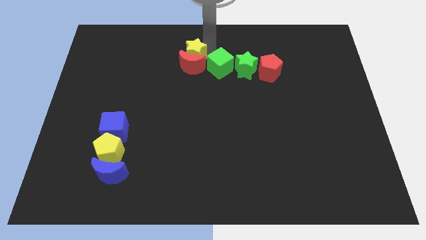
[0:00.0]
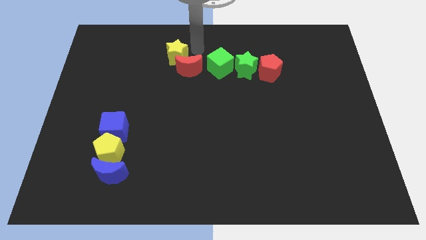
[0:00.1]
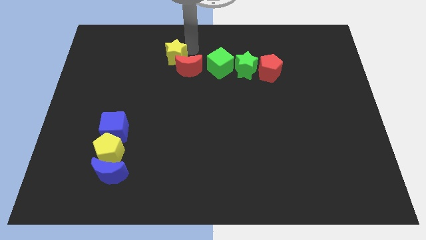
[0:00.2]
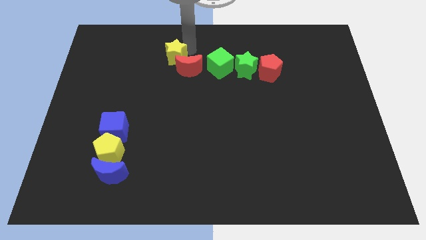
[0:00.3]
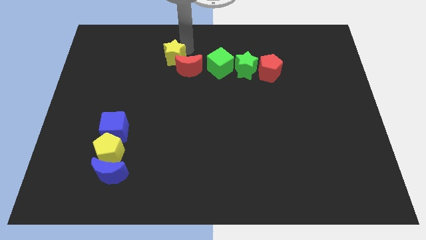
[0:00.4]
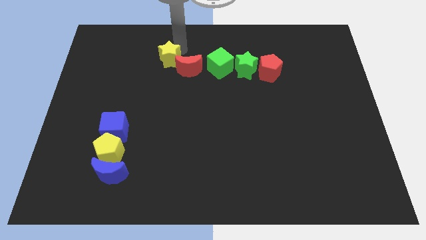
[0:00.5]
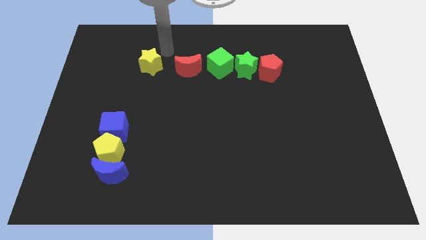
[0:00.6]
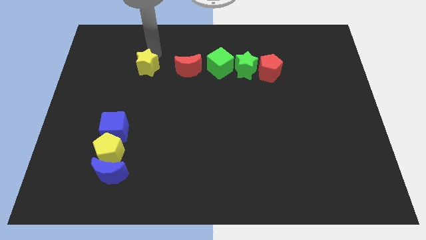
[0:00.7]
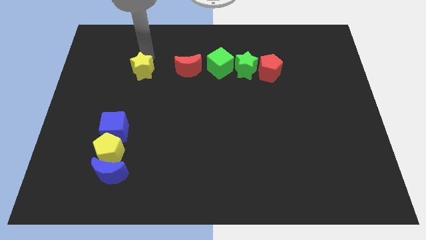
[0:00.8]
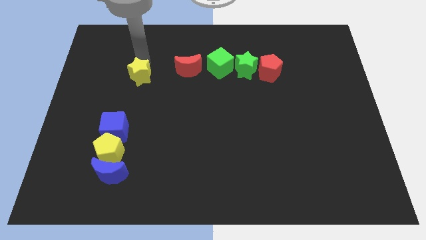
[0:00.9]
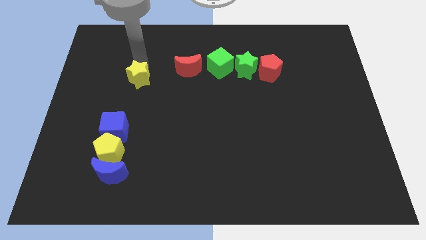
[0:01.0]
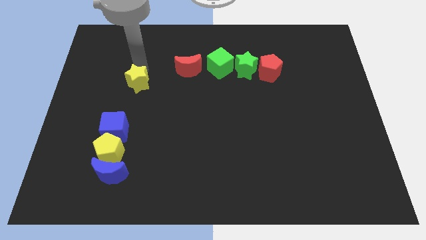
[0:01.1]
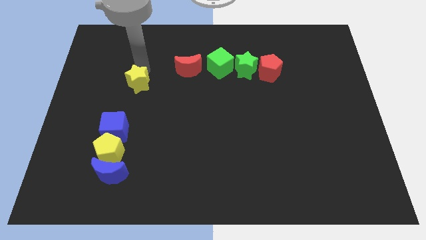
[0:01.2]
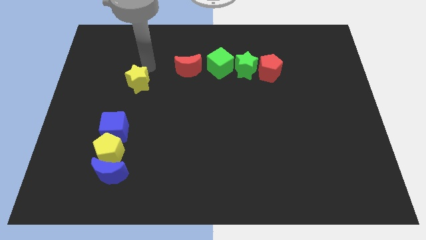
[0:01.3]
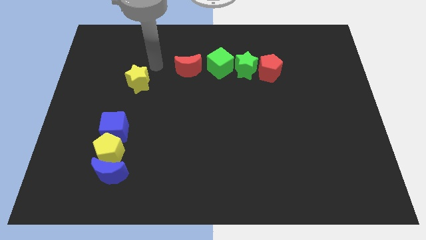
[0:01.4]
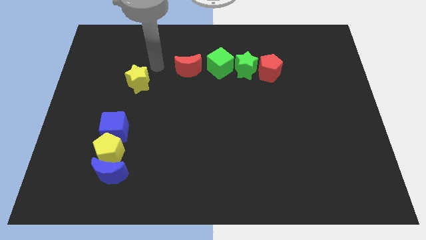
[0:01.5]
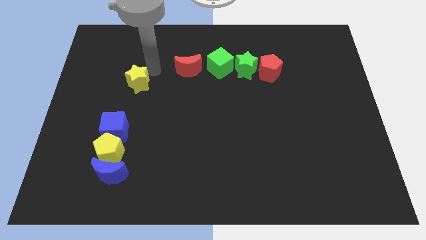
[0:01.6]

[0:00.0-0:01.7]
separate the yellow star from the red moon

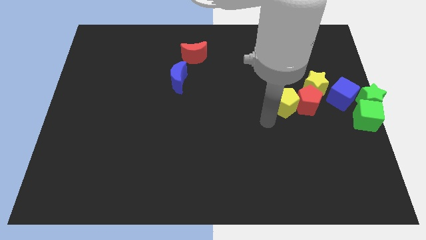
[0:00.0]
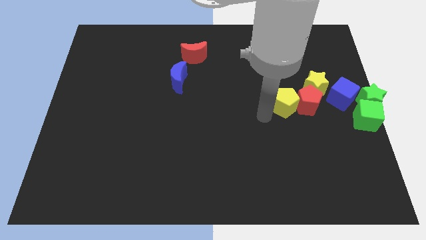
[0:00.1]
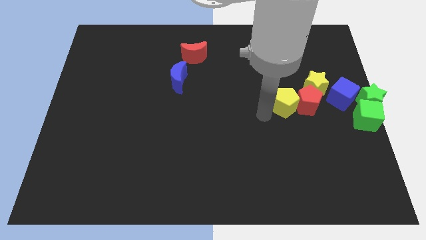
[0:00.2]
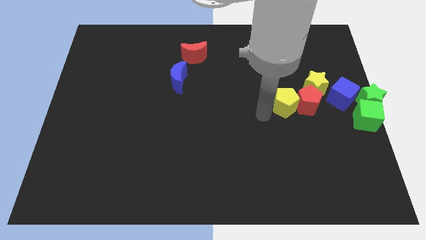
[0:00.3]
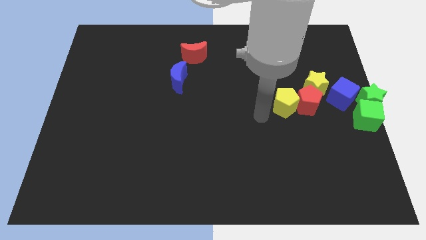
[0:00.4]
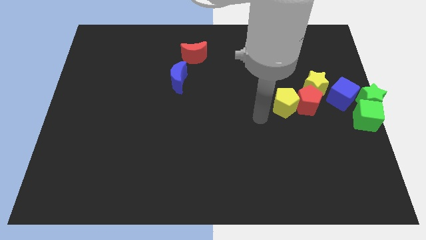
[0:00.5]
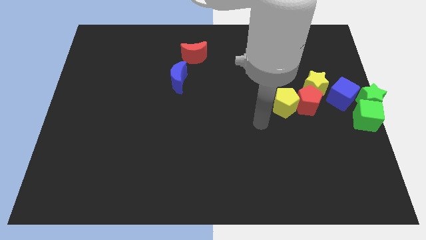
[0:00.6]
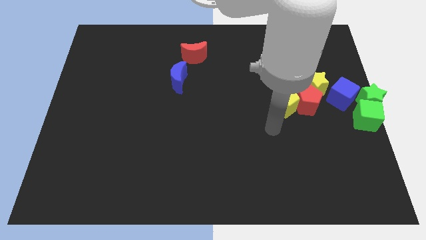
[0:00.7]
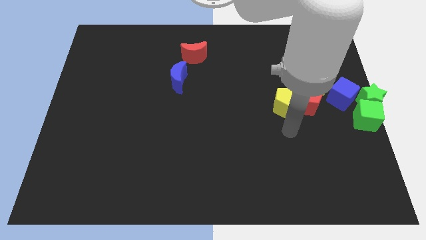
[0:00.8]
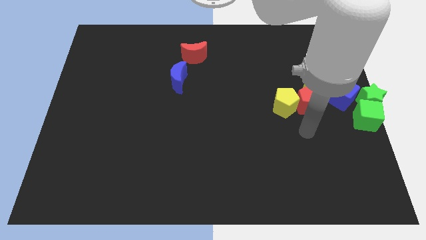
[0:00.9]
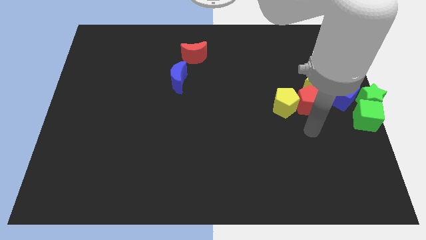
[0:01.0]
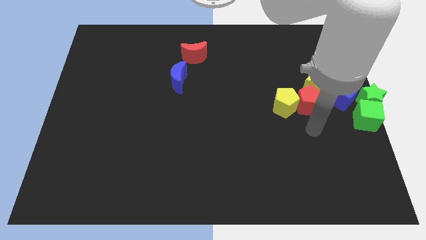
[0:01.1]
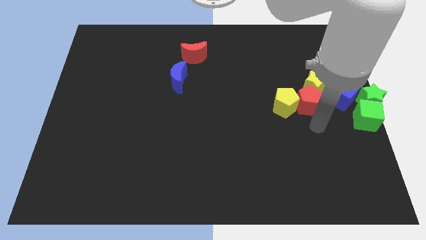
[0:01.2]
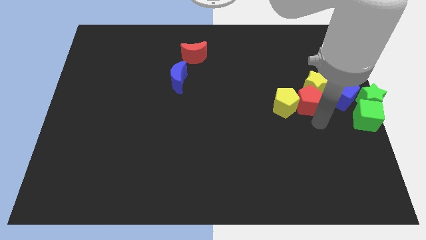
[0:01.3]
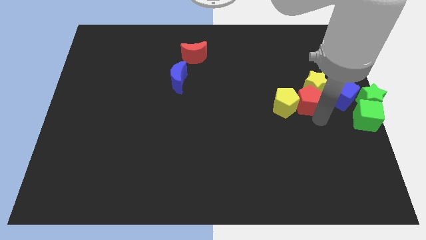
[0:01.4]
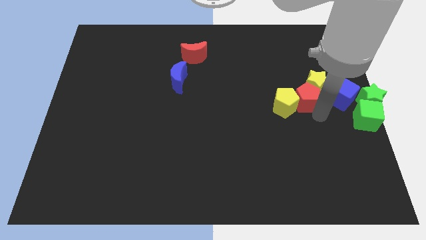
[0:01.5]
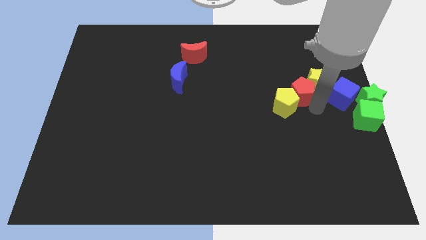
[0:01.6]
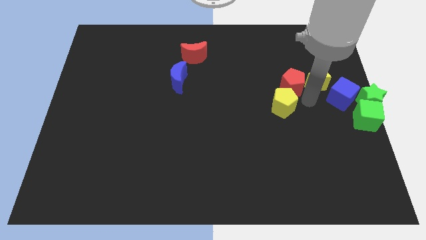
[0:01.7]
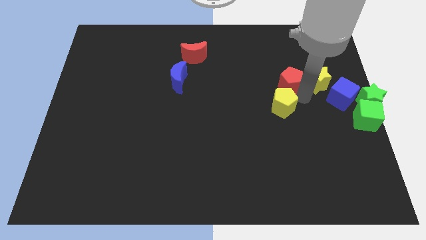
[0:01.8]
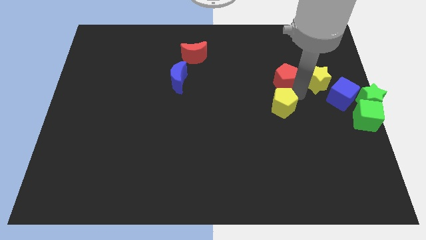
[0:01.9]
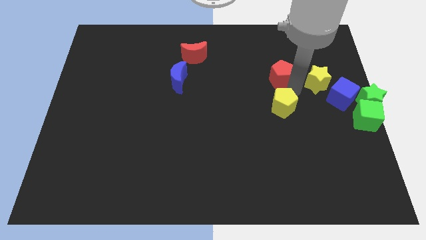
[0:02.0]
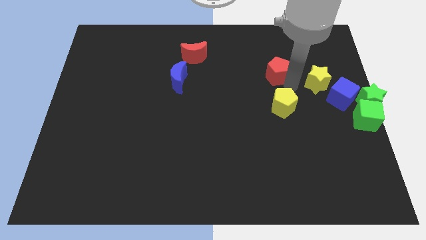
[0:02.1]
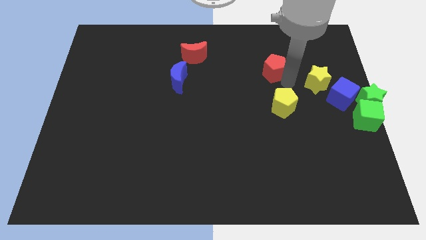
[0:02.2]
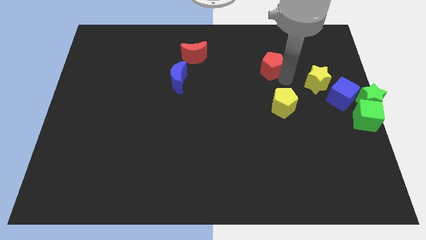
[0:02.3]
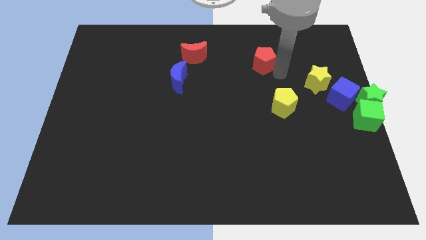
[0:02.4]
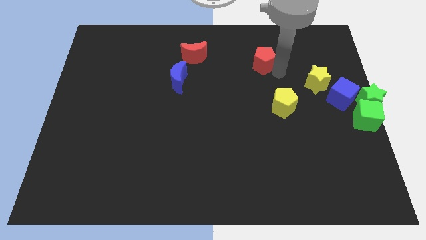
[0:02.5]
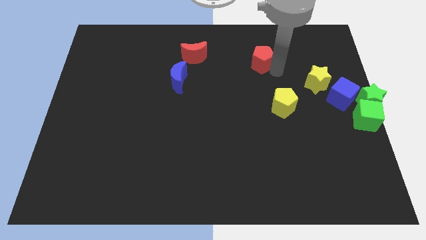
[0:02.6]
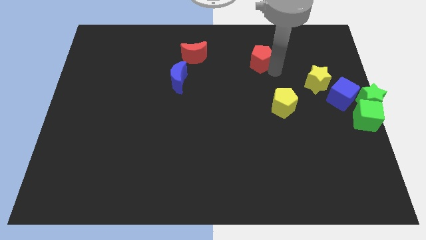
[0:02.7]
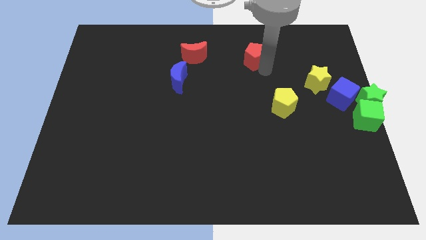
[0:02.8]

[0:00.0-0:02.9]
move the red pentagon right to red crescent

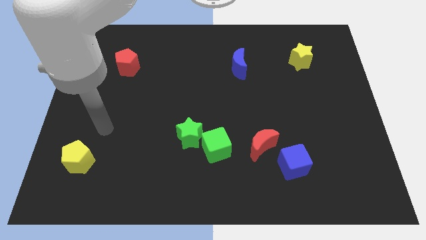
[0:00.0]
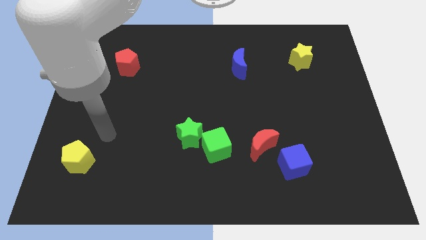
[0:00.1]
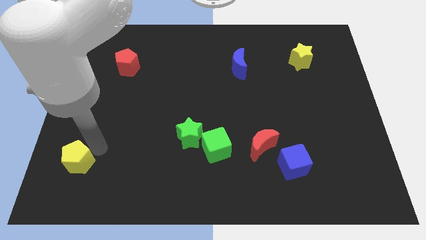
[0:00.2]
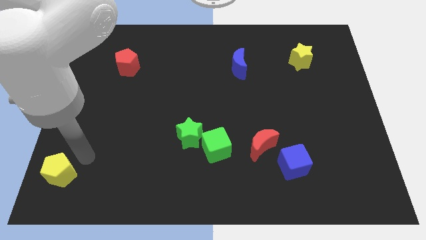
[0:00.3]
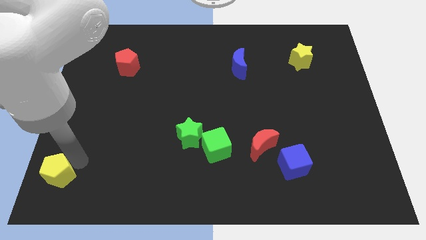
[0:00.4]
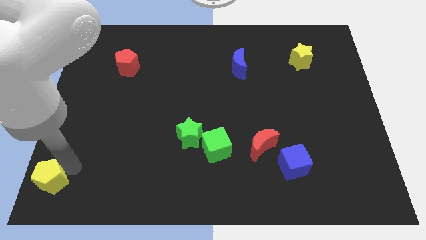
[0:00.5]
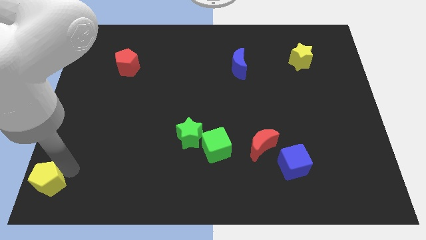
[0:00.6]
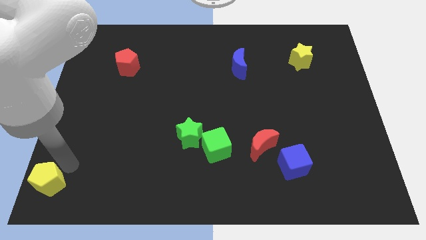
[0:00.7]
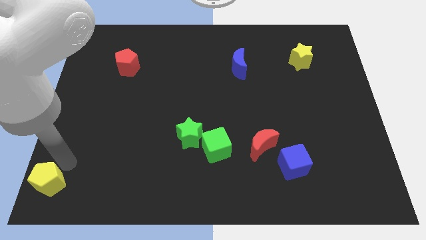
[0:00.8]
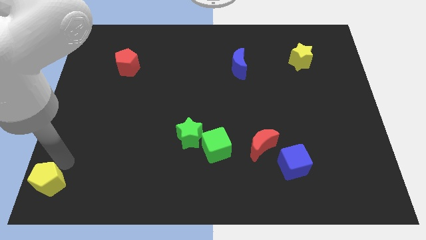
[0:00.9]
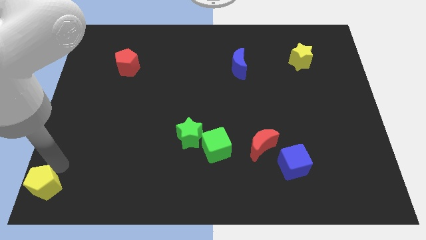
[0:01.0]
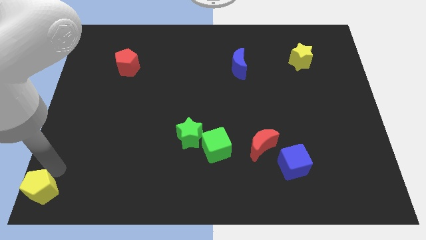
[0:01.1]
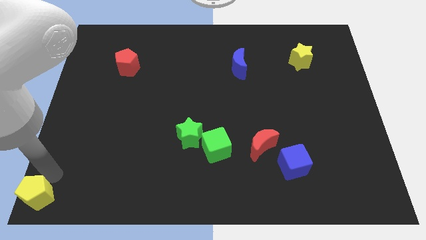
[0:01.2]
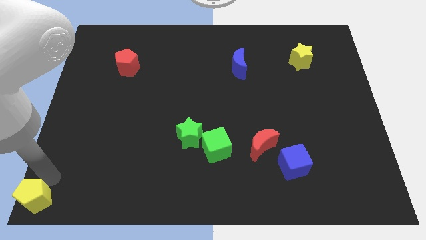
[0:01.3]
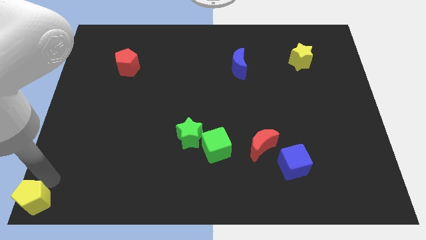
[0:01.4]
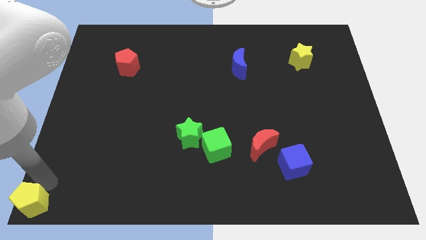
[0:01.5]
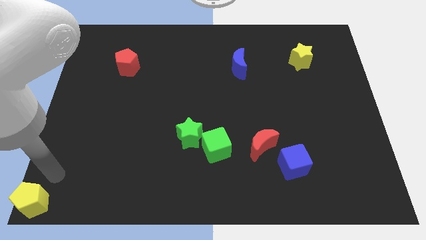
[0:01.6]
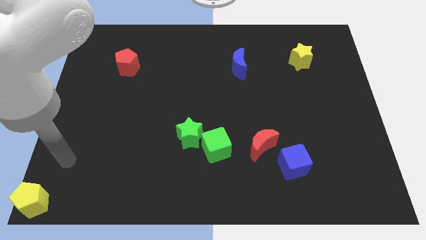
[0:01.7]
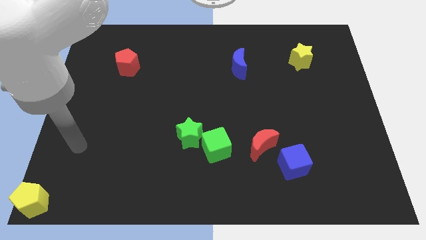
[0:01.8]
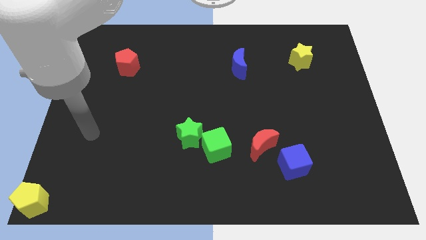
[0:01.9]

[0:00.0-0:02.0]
move the yellow pentagon to the bottom left of the board

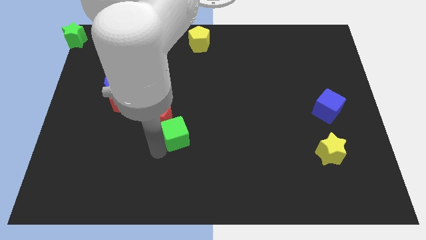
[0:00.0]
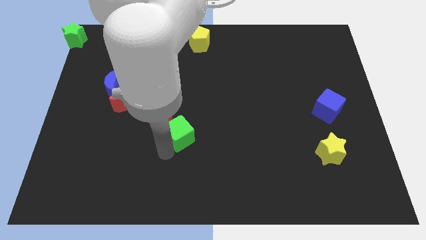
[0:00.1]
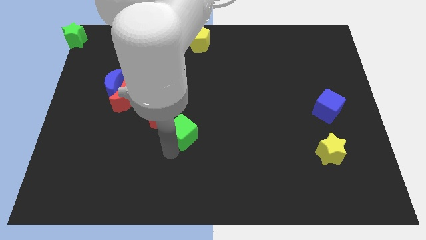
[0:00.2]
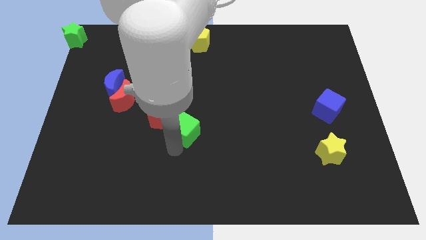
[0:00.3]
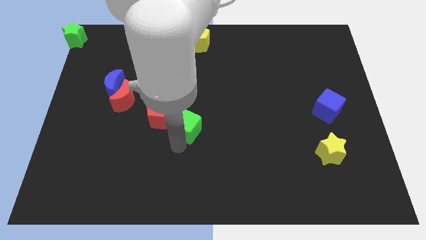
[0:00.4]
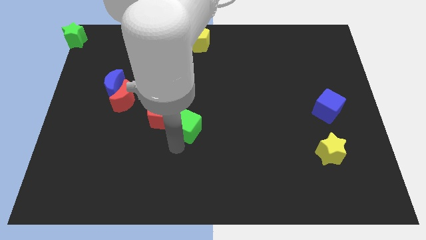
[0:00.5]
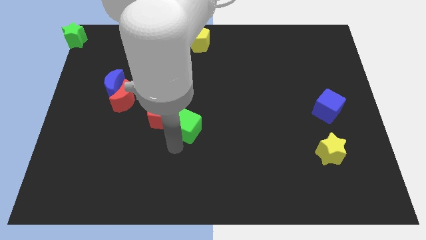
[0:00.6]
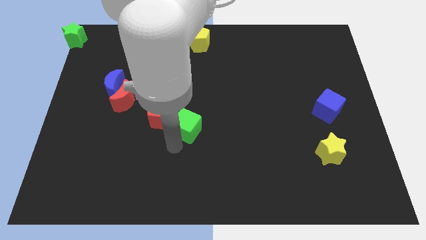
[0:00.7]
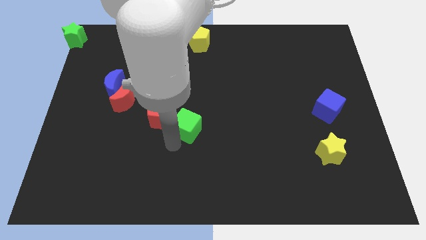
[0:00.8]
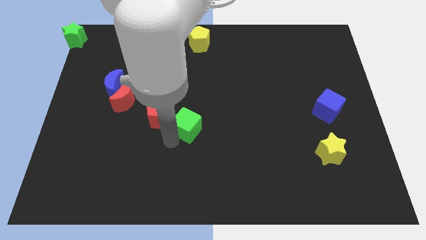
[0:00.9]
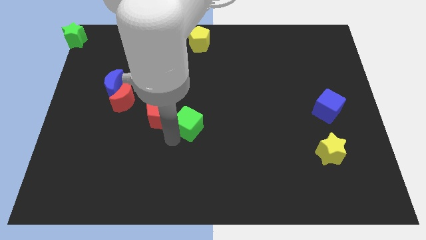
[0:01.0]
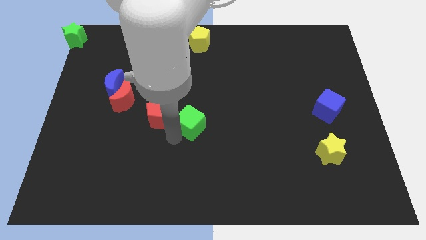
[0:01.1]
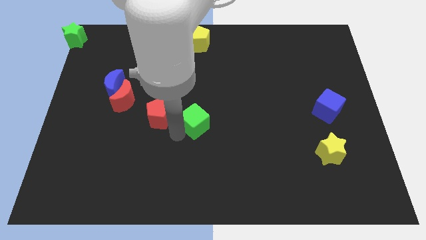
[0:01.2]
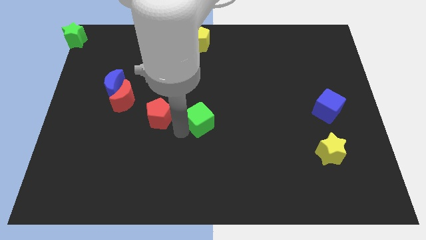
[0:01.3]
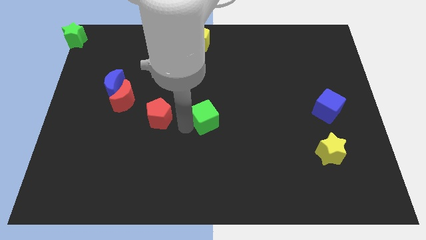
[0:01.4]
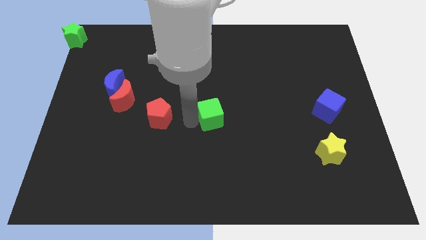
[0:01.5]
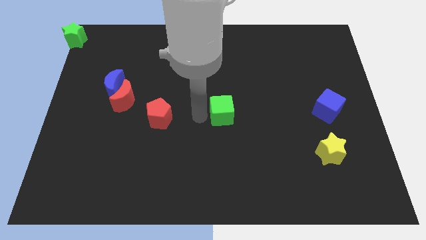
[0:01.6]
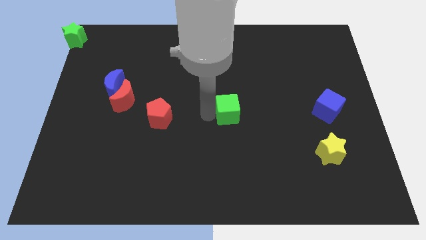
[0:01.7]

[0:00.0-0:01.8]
place the green cube to the center

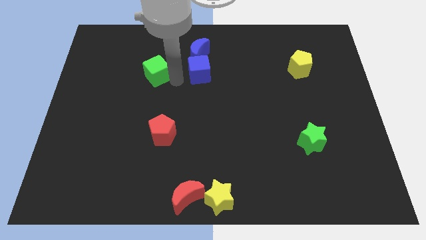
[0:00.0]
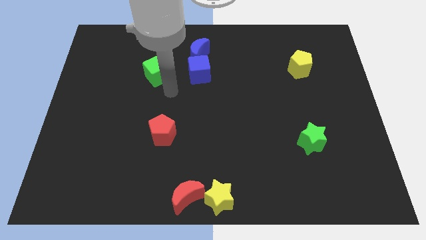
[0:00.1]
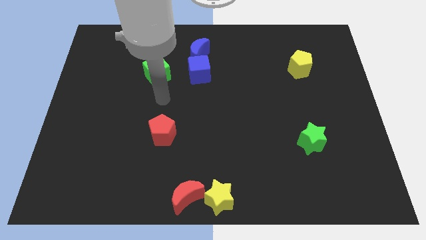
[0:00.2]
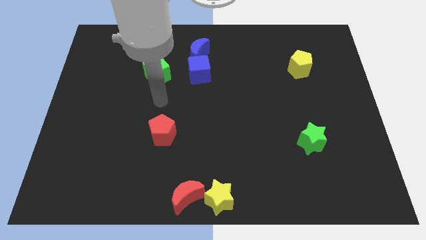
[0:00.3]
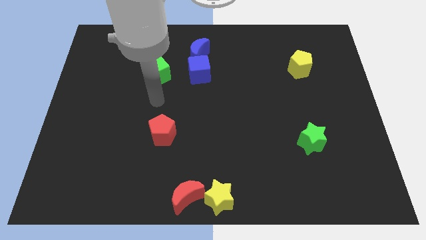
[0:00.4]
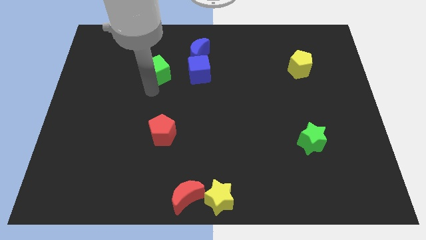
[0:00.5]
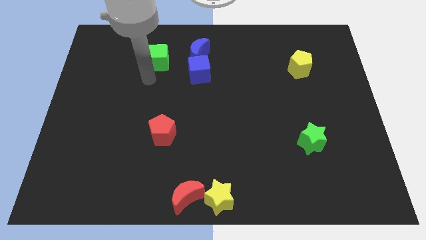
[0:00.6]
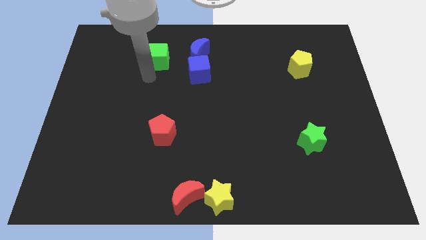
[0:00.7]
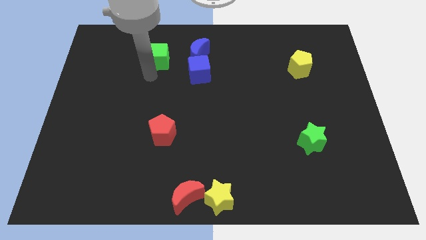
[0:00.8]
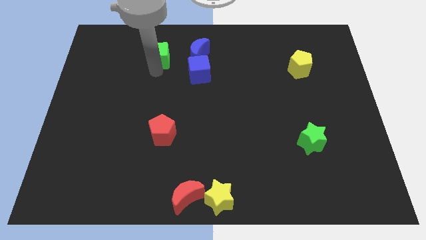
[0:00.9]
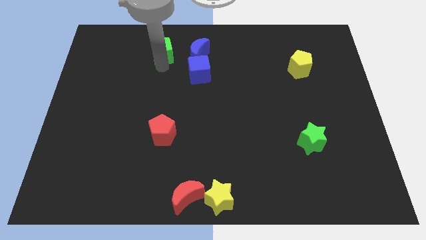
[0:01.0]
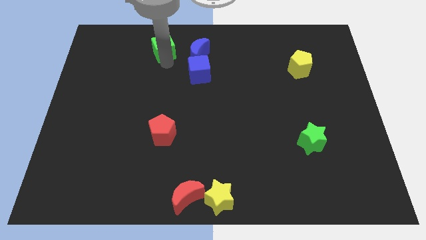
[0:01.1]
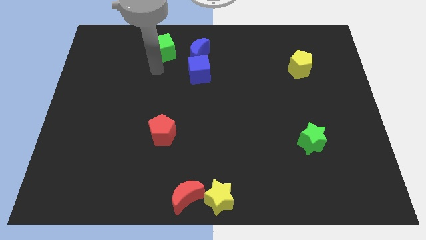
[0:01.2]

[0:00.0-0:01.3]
push the green cube to the left side of the blue crescent
